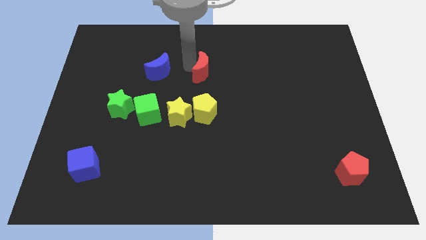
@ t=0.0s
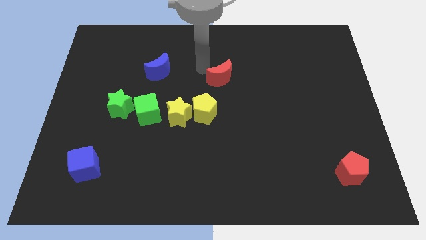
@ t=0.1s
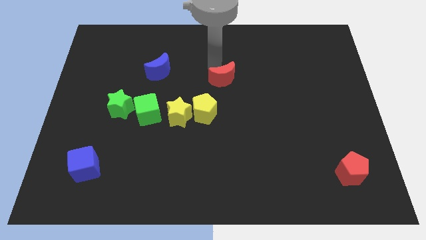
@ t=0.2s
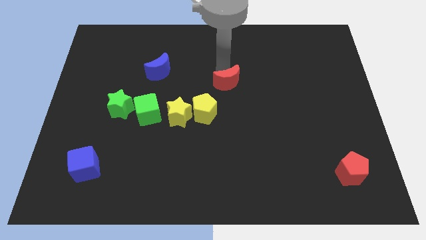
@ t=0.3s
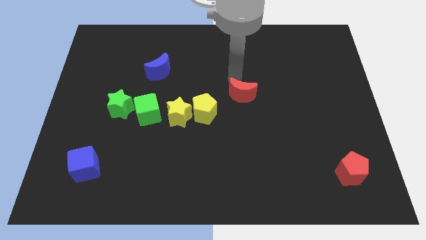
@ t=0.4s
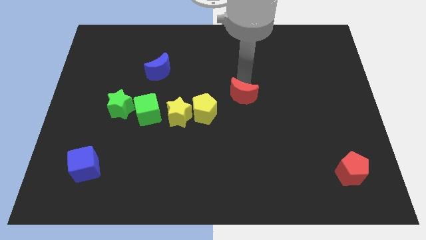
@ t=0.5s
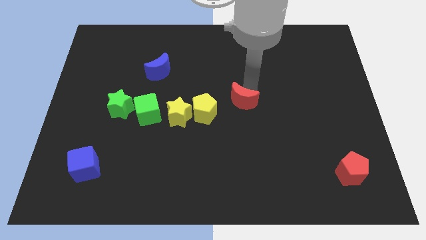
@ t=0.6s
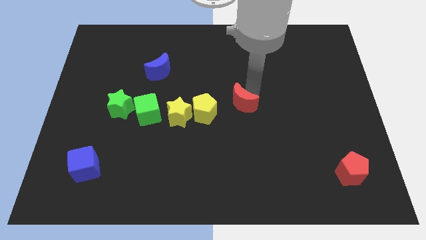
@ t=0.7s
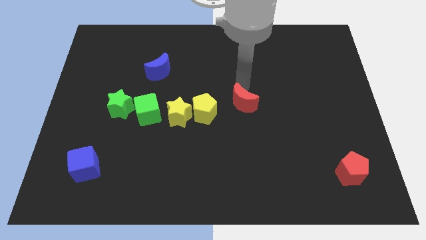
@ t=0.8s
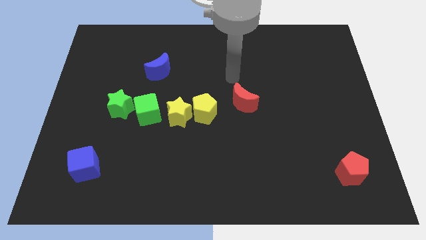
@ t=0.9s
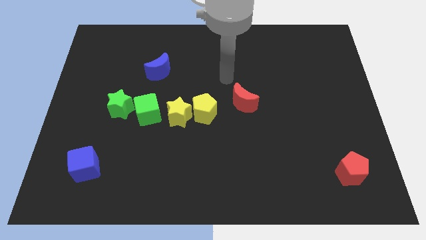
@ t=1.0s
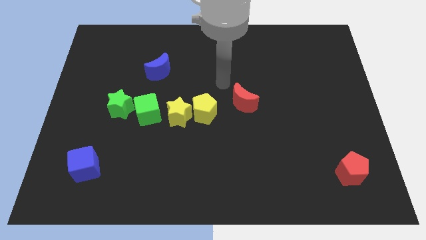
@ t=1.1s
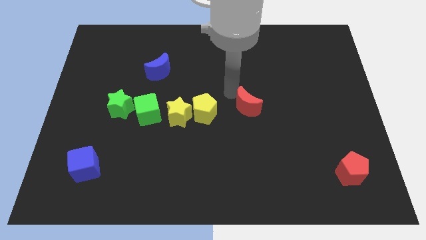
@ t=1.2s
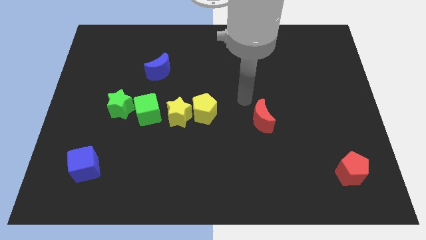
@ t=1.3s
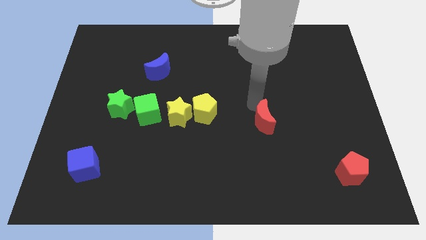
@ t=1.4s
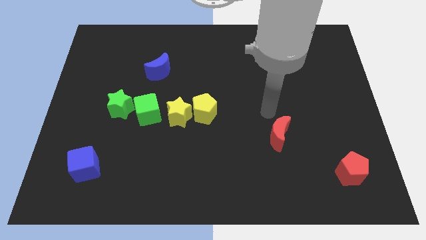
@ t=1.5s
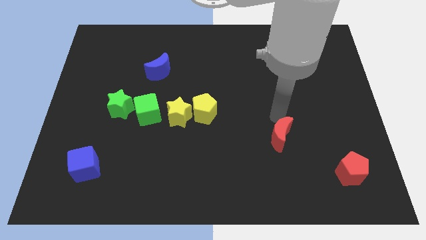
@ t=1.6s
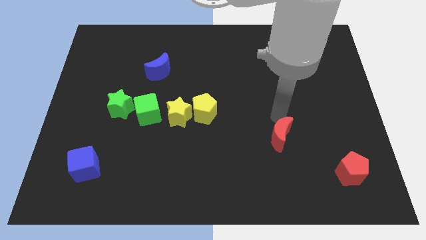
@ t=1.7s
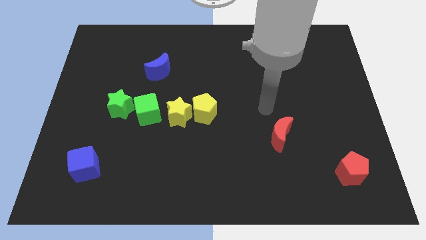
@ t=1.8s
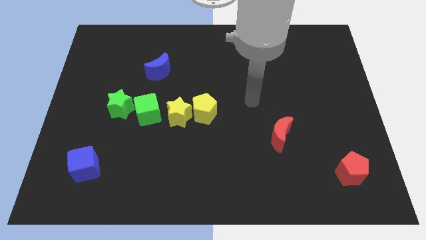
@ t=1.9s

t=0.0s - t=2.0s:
drag the red moon to the diagonal of red pentagon

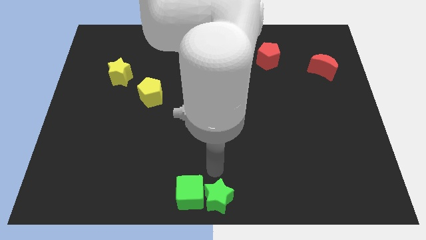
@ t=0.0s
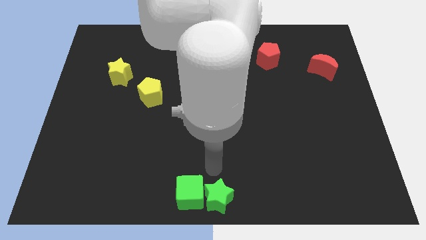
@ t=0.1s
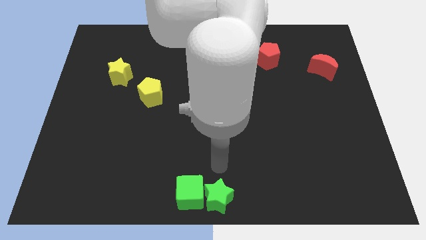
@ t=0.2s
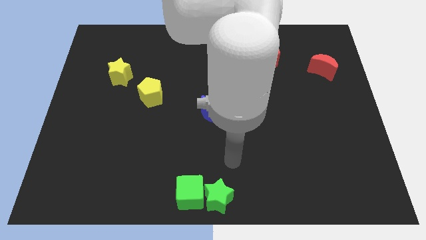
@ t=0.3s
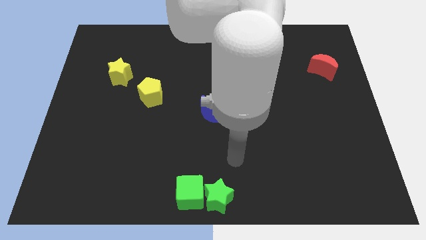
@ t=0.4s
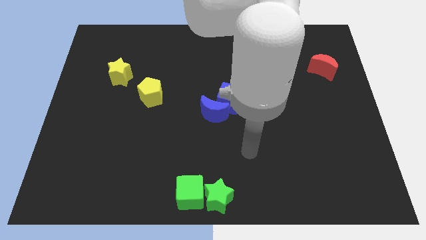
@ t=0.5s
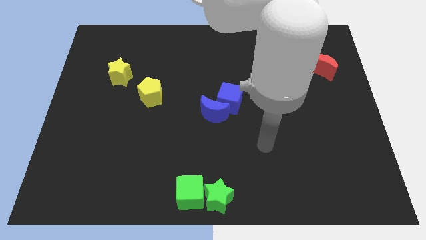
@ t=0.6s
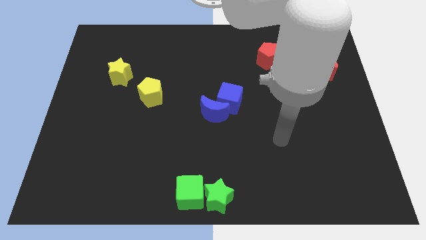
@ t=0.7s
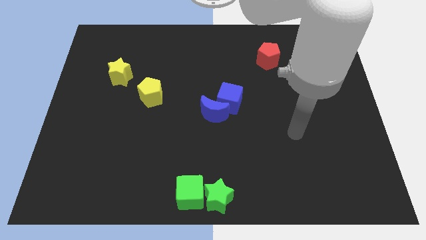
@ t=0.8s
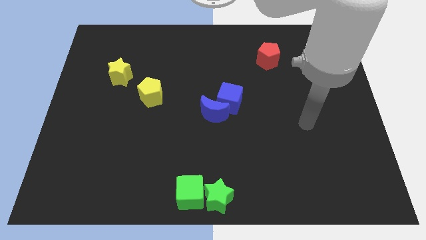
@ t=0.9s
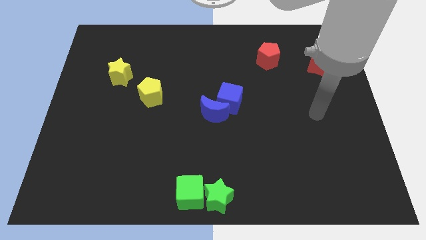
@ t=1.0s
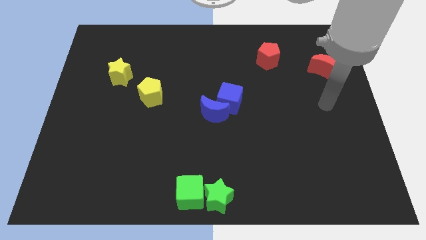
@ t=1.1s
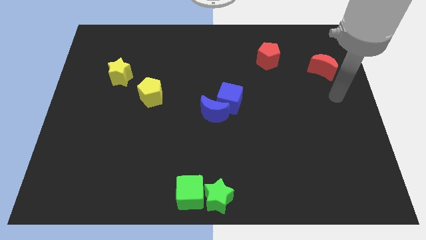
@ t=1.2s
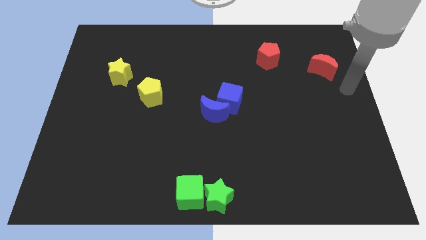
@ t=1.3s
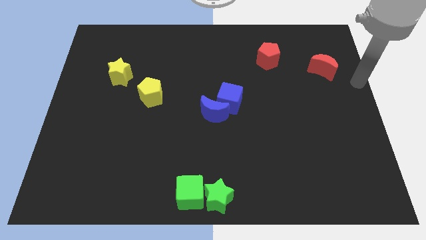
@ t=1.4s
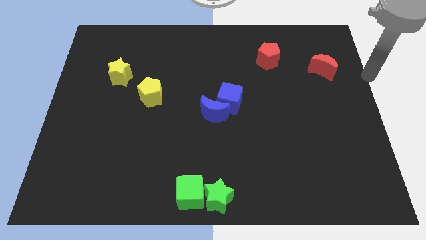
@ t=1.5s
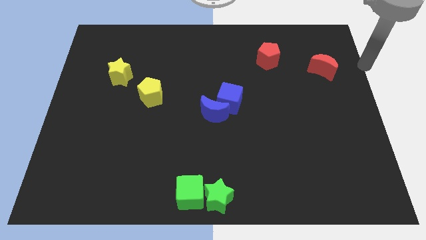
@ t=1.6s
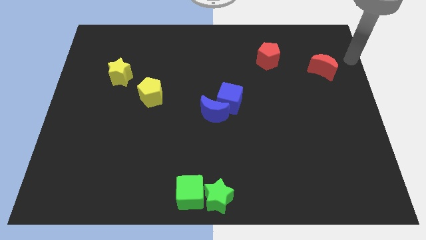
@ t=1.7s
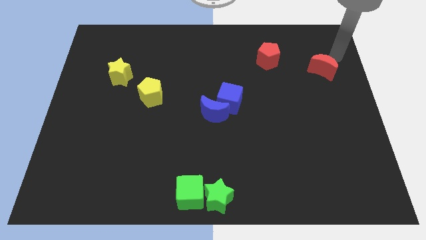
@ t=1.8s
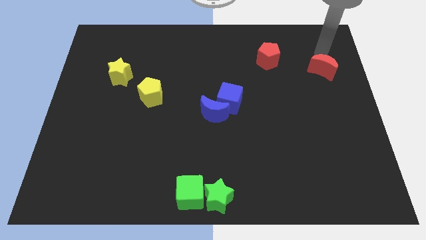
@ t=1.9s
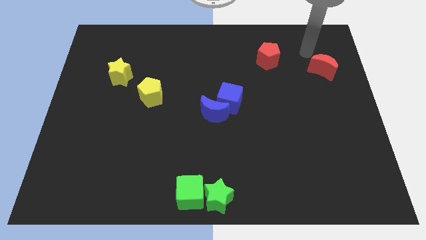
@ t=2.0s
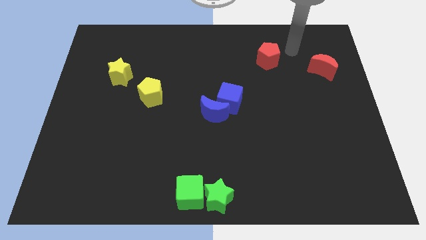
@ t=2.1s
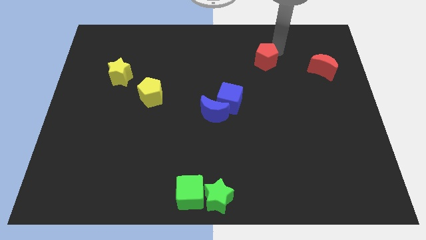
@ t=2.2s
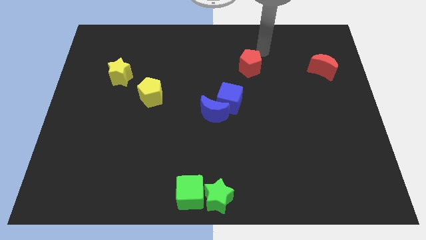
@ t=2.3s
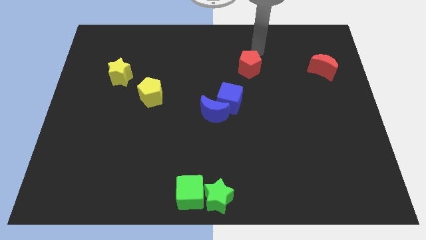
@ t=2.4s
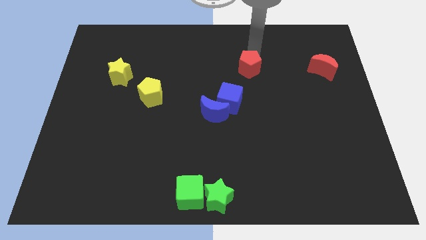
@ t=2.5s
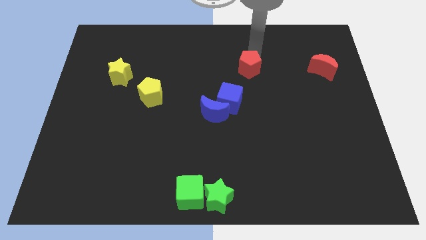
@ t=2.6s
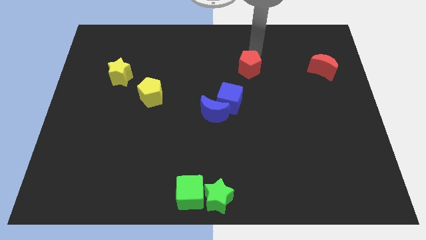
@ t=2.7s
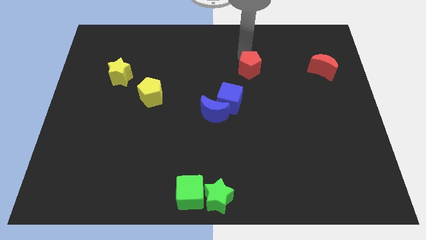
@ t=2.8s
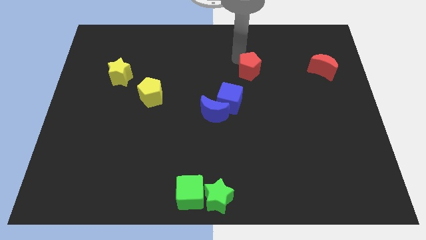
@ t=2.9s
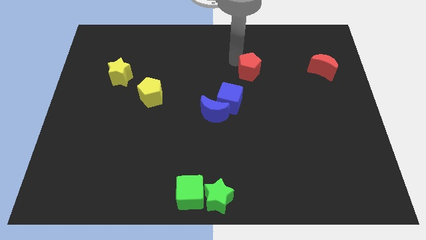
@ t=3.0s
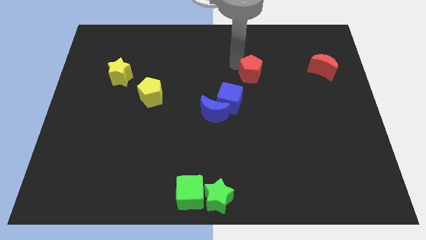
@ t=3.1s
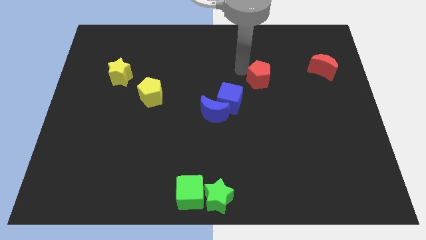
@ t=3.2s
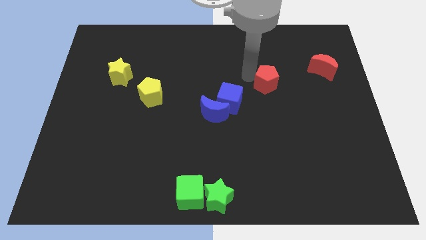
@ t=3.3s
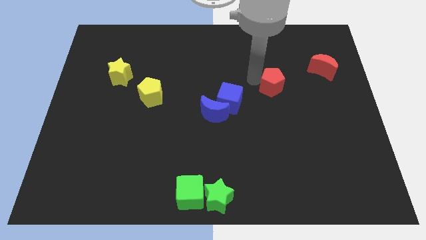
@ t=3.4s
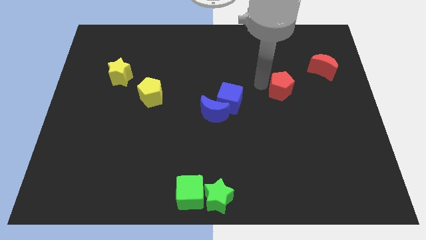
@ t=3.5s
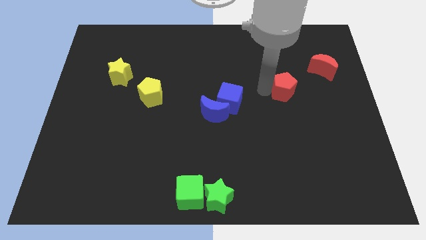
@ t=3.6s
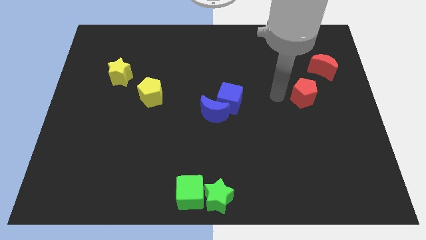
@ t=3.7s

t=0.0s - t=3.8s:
move the red pentagon towards the bottom

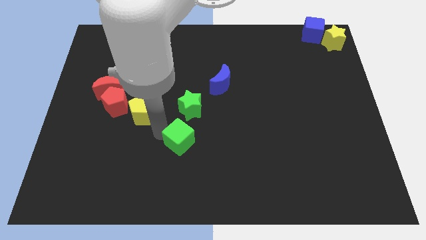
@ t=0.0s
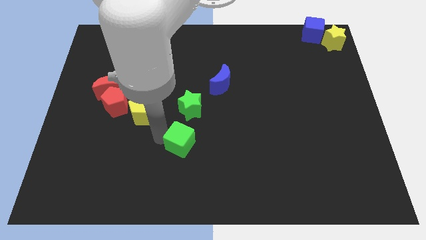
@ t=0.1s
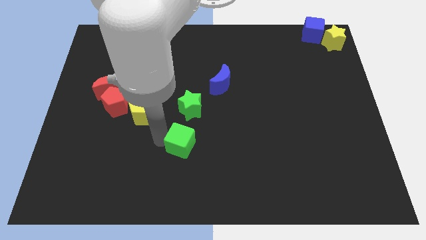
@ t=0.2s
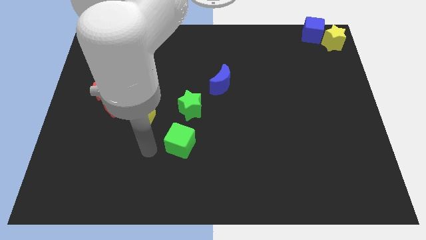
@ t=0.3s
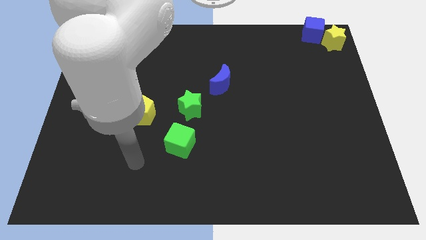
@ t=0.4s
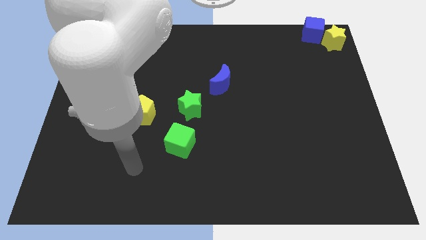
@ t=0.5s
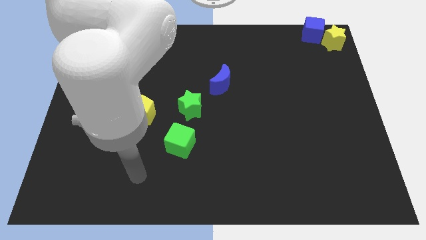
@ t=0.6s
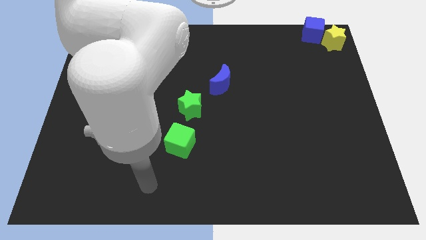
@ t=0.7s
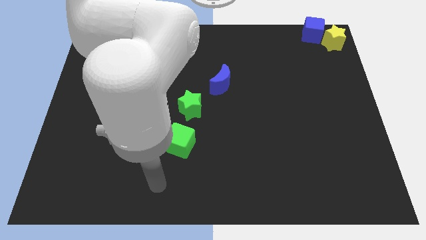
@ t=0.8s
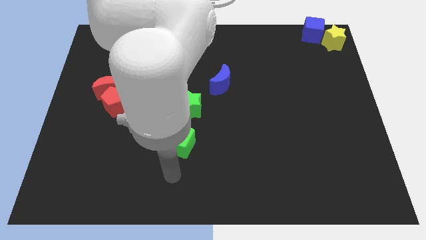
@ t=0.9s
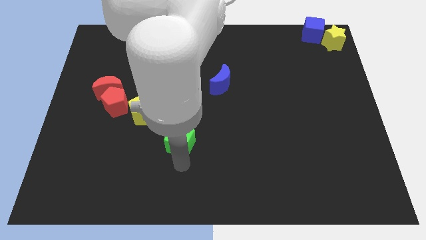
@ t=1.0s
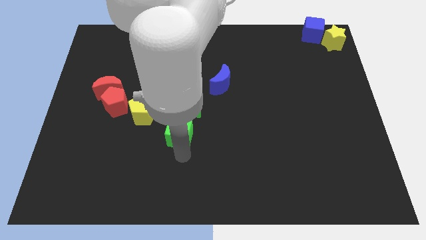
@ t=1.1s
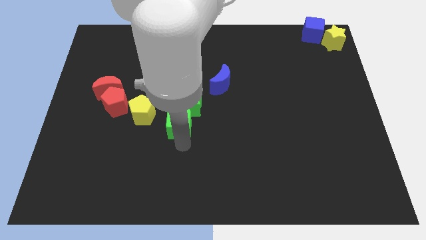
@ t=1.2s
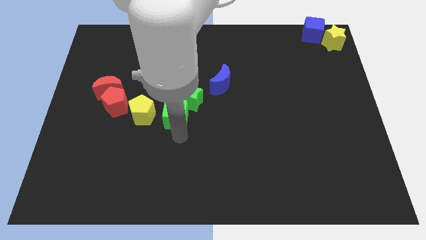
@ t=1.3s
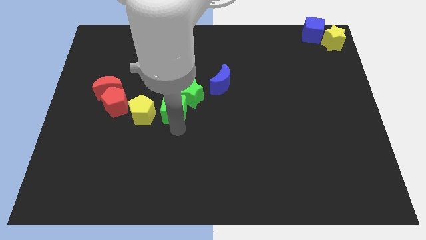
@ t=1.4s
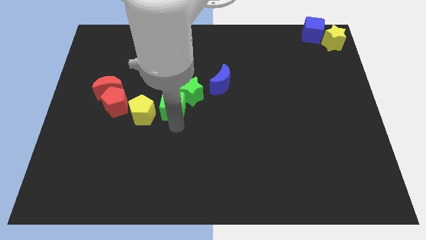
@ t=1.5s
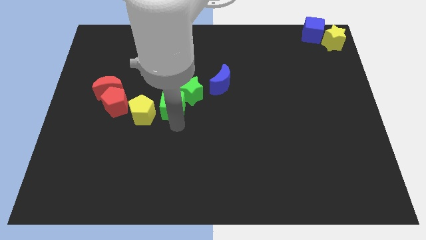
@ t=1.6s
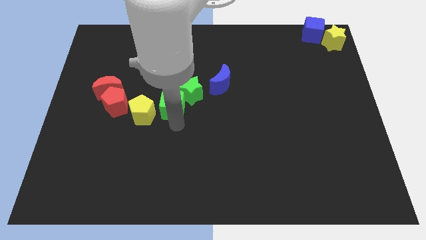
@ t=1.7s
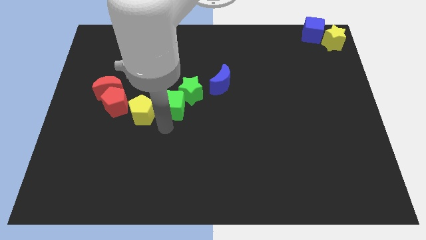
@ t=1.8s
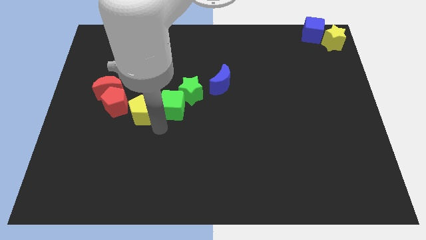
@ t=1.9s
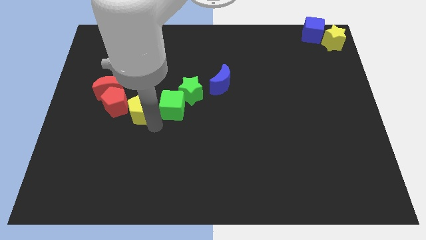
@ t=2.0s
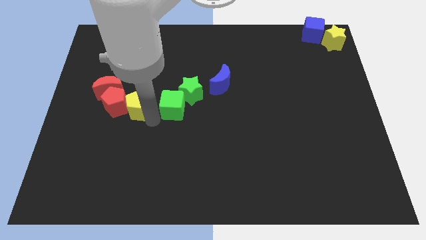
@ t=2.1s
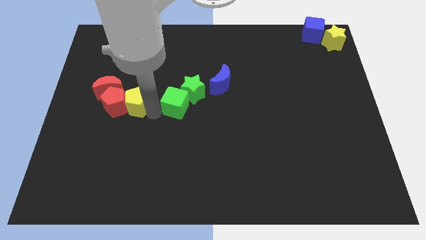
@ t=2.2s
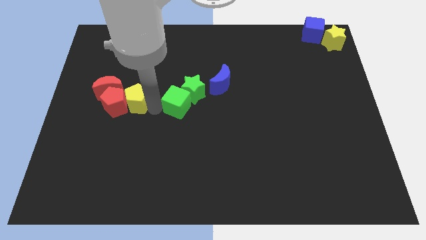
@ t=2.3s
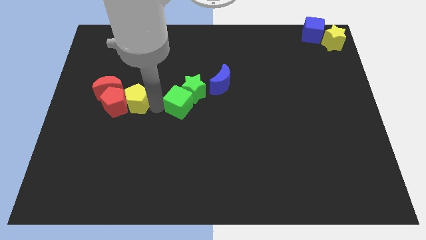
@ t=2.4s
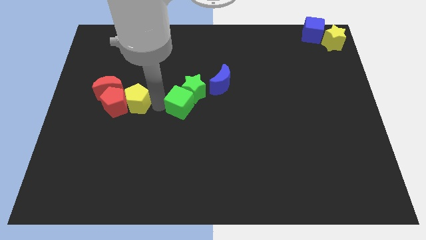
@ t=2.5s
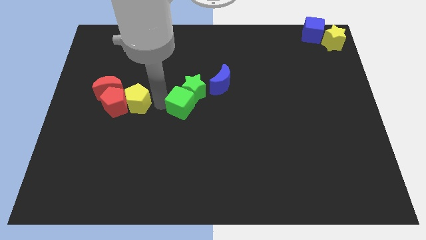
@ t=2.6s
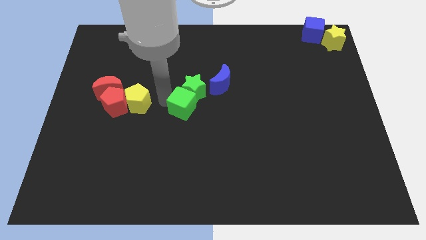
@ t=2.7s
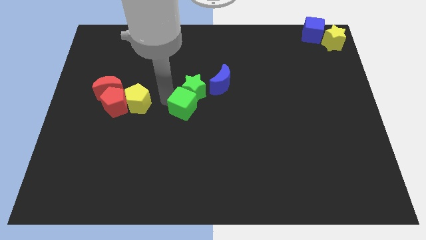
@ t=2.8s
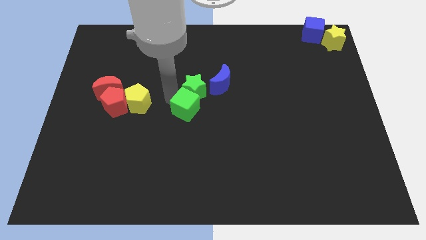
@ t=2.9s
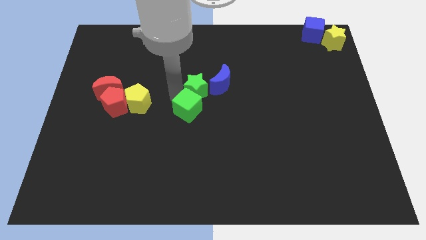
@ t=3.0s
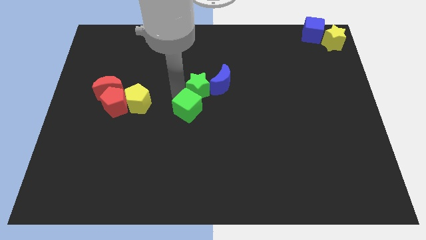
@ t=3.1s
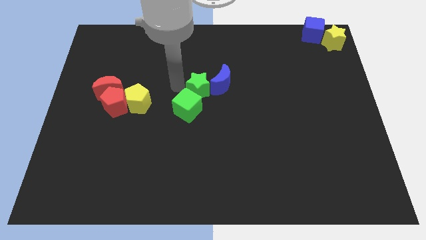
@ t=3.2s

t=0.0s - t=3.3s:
push the green star and green cube towards the top side
